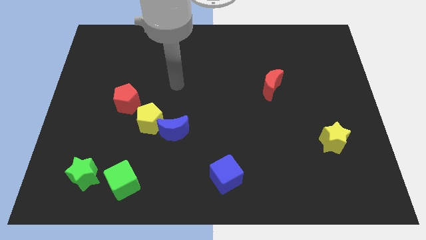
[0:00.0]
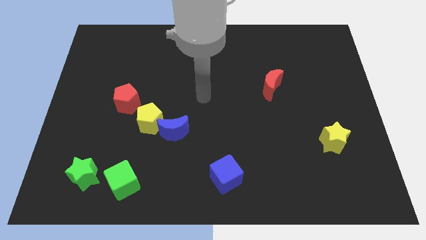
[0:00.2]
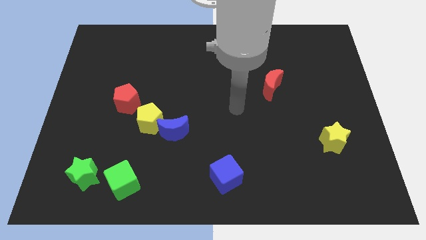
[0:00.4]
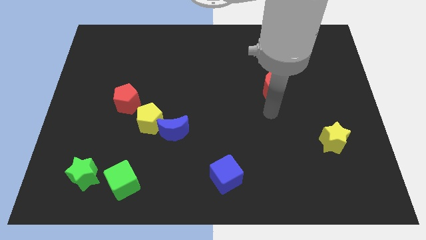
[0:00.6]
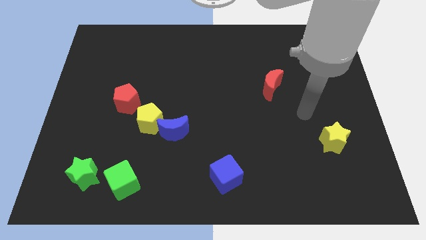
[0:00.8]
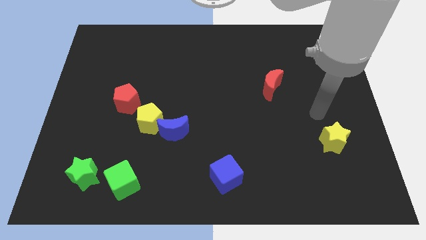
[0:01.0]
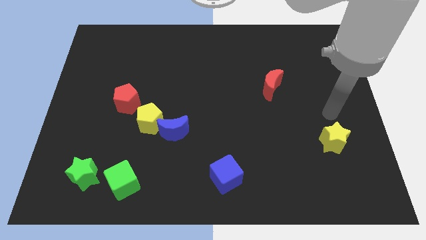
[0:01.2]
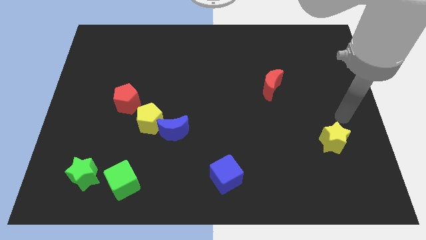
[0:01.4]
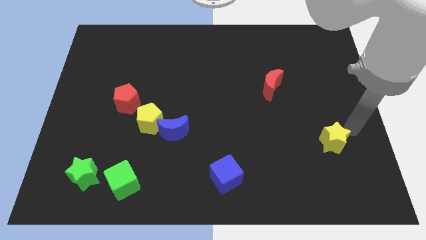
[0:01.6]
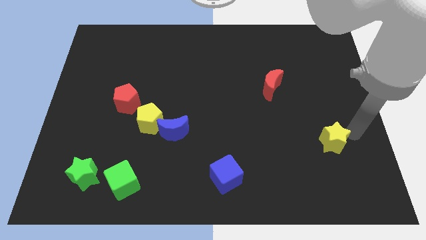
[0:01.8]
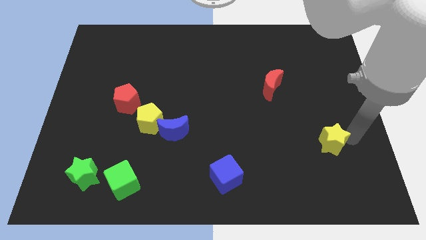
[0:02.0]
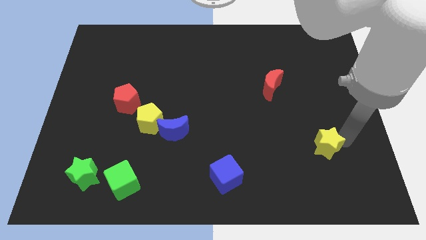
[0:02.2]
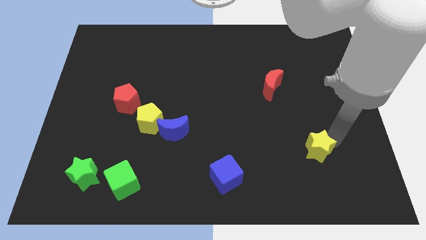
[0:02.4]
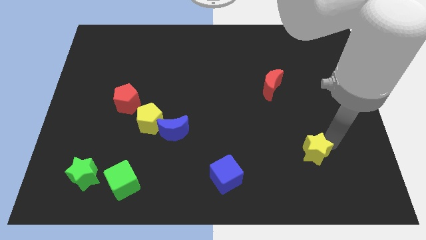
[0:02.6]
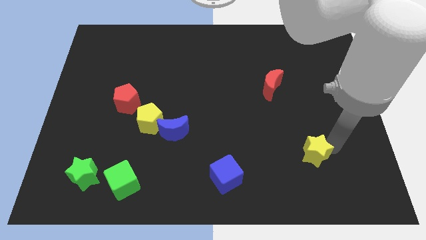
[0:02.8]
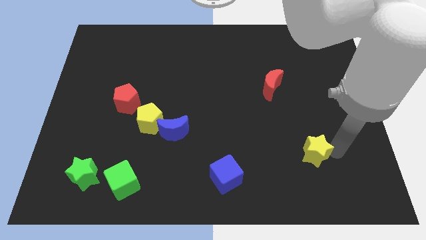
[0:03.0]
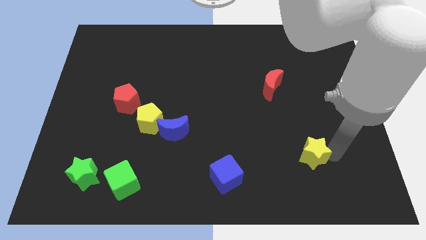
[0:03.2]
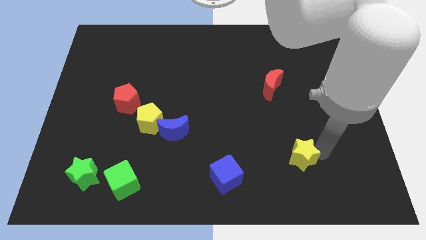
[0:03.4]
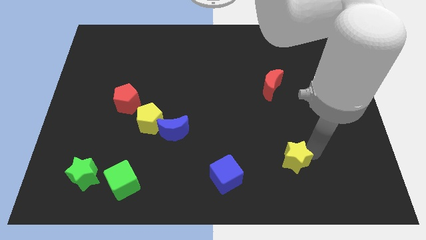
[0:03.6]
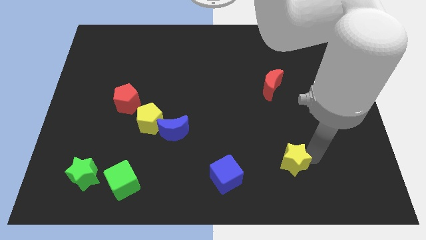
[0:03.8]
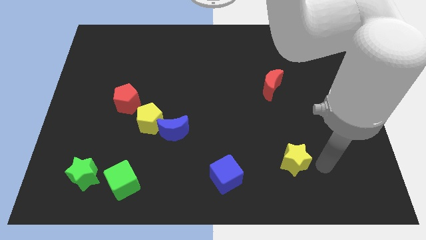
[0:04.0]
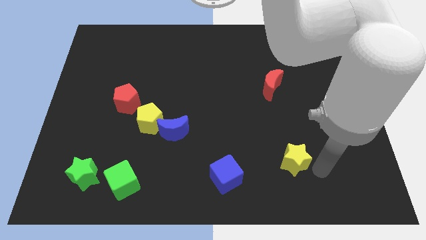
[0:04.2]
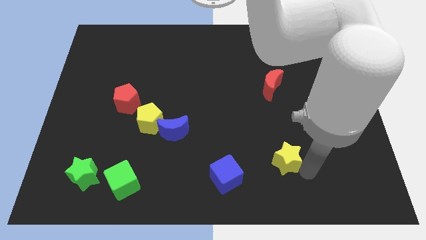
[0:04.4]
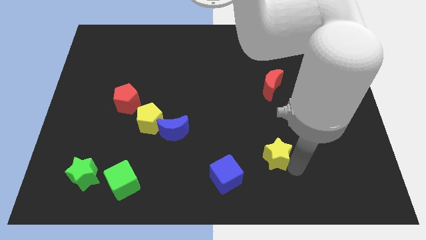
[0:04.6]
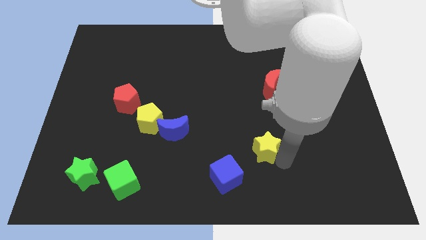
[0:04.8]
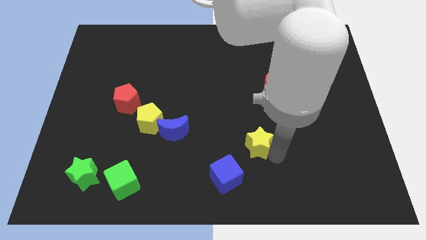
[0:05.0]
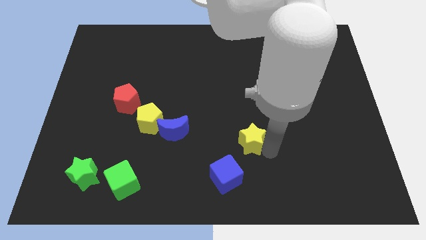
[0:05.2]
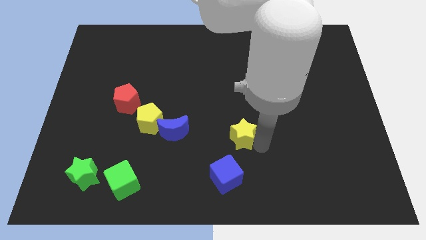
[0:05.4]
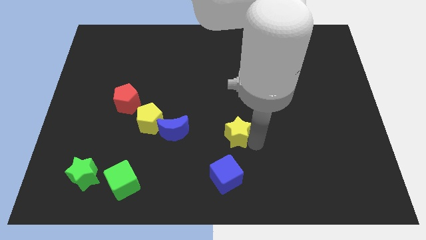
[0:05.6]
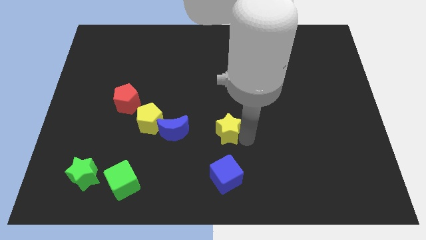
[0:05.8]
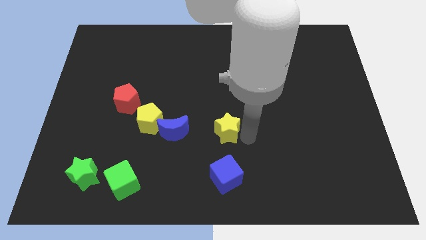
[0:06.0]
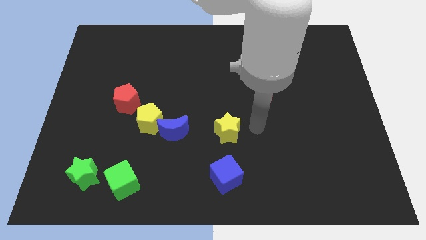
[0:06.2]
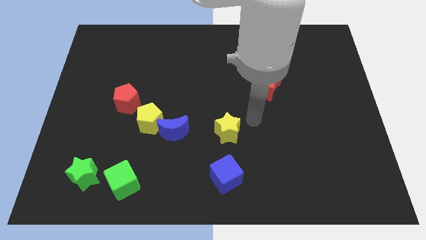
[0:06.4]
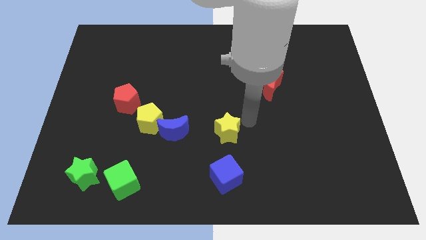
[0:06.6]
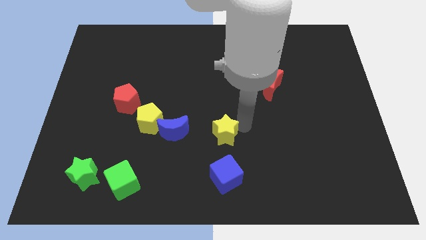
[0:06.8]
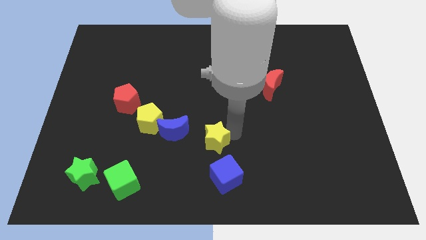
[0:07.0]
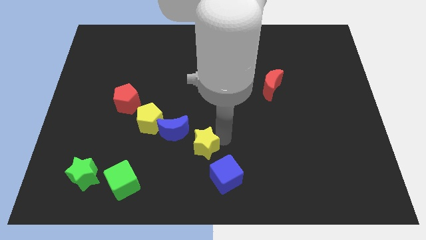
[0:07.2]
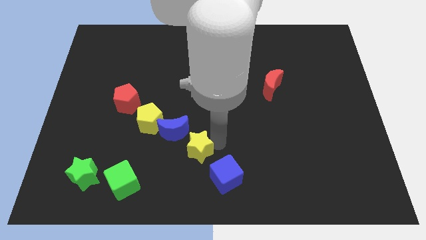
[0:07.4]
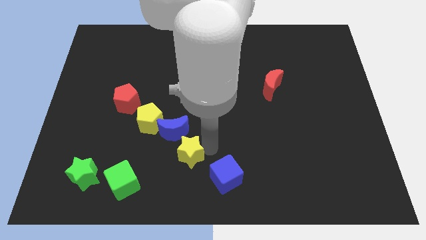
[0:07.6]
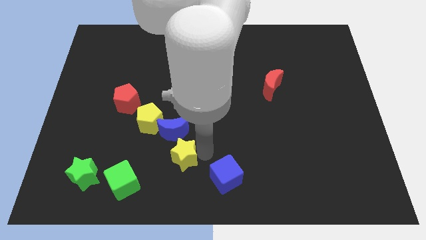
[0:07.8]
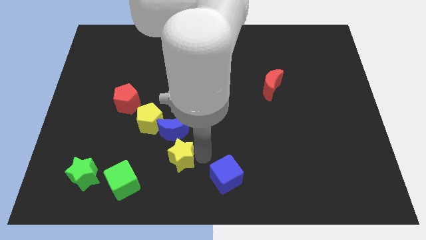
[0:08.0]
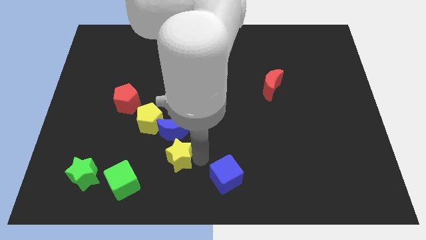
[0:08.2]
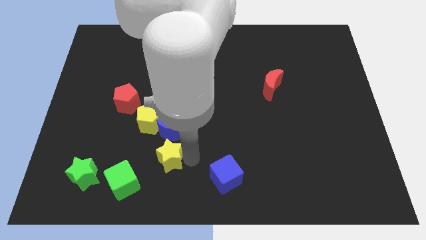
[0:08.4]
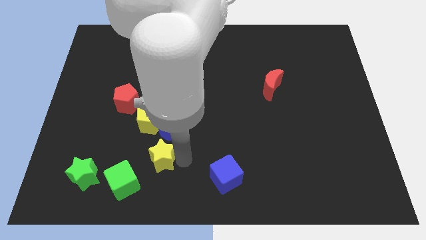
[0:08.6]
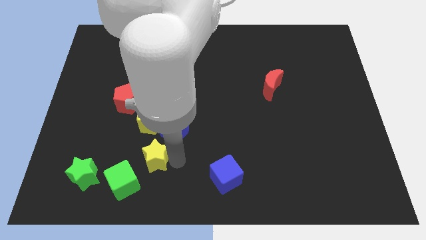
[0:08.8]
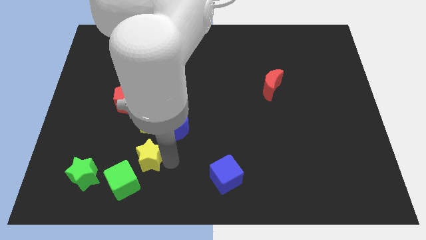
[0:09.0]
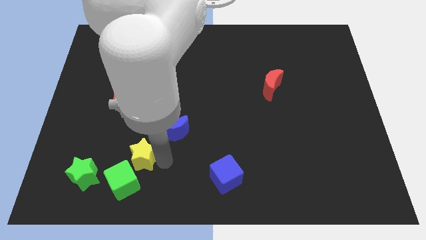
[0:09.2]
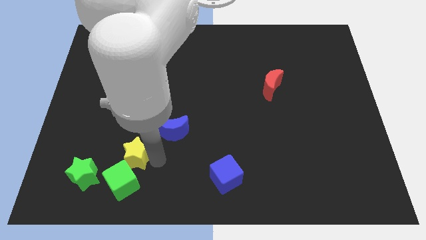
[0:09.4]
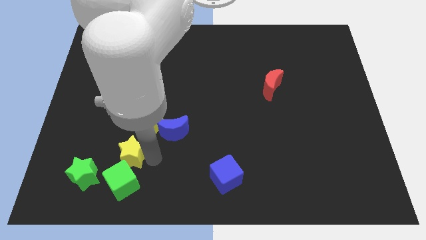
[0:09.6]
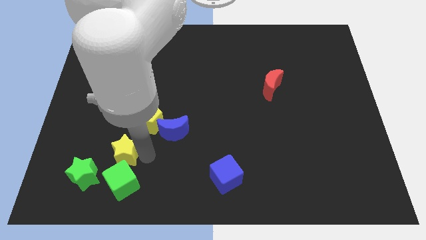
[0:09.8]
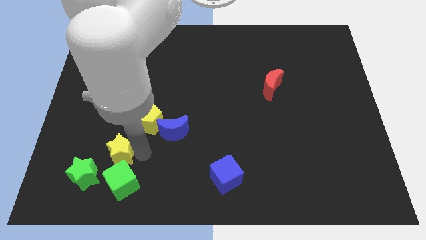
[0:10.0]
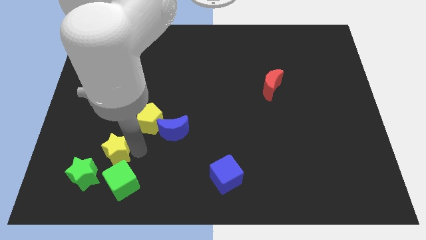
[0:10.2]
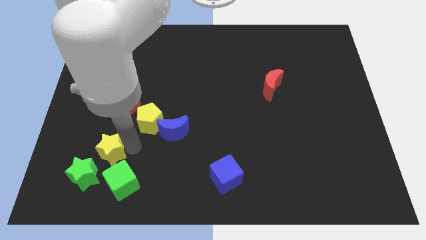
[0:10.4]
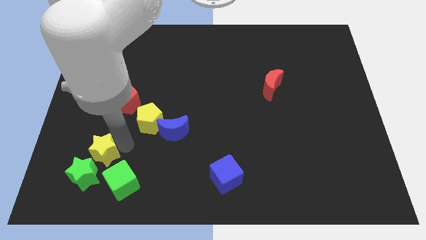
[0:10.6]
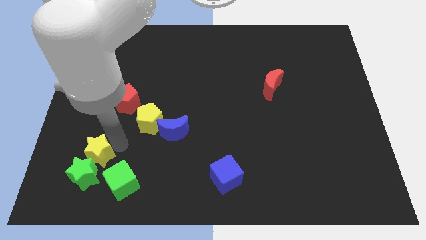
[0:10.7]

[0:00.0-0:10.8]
push the yellow star next to the green star

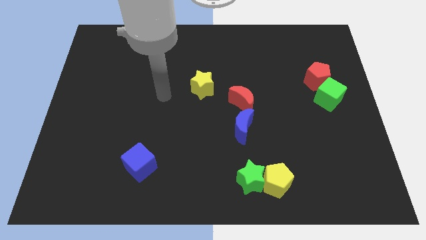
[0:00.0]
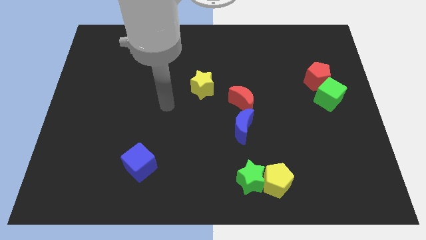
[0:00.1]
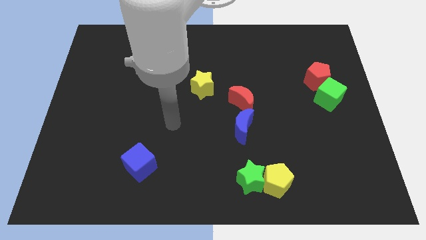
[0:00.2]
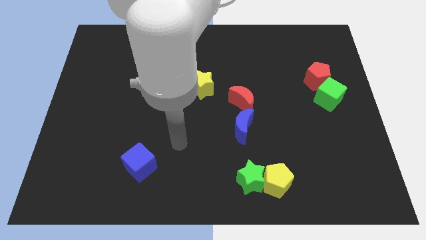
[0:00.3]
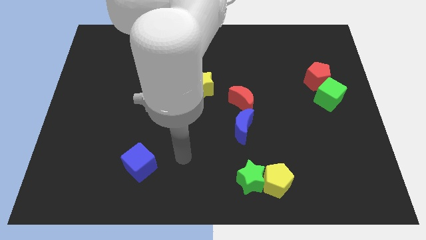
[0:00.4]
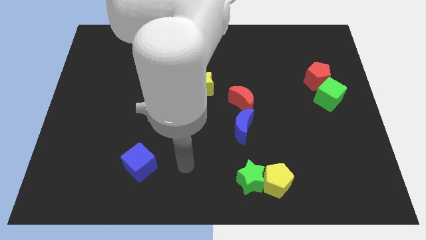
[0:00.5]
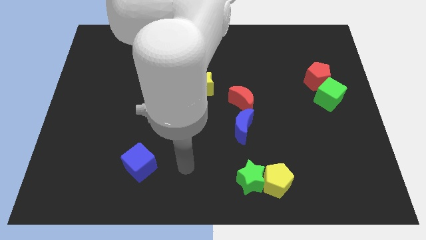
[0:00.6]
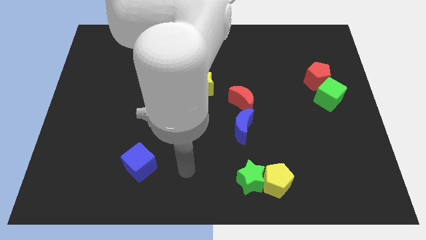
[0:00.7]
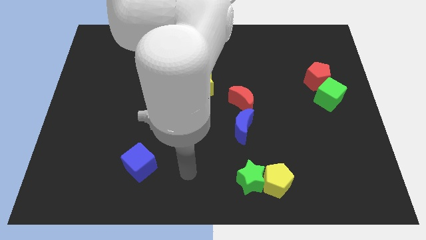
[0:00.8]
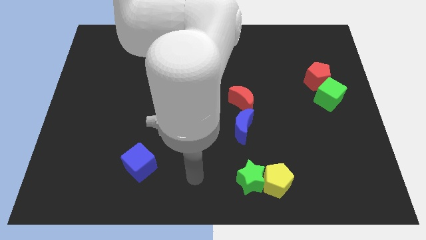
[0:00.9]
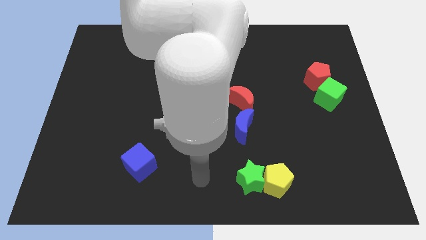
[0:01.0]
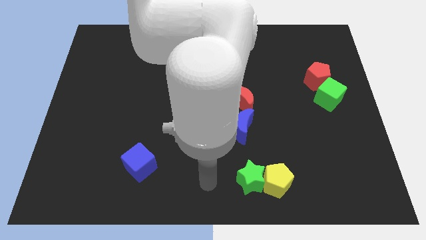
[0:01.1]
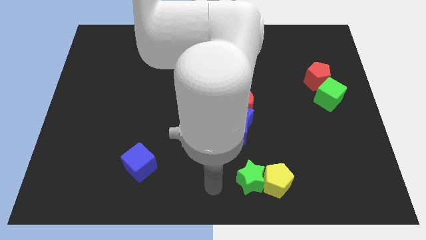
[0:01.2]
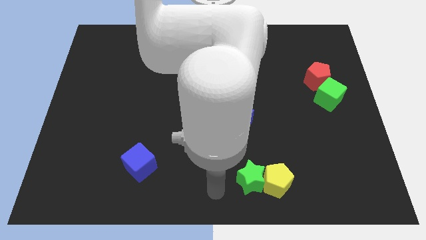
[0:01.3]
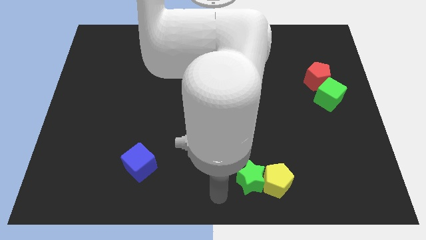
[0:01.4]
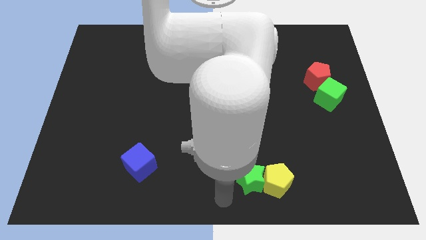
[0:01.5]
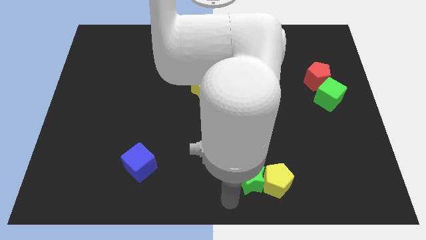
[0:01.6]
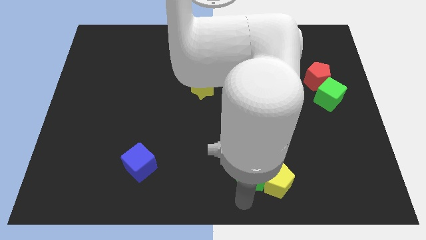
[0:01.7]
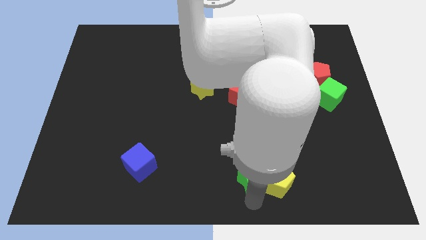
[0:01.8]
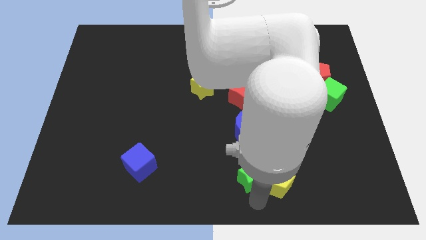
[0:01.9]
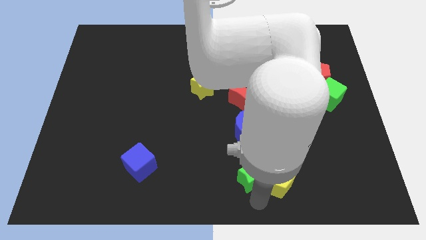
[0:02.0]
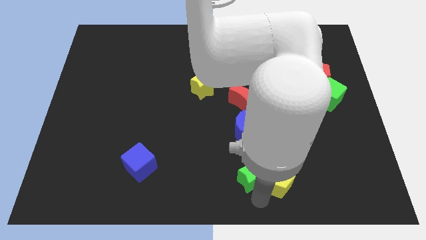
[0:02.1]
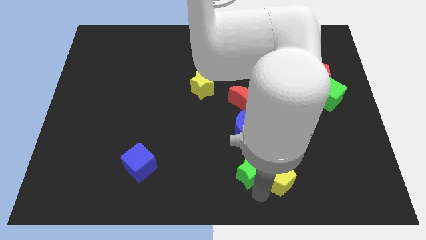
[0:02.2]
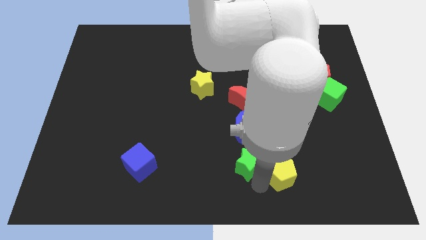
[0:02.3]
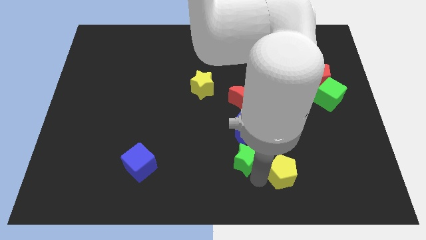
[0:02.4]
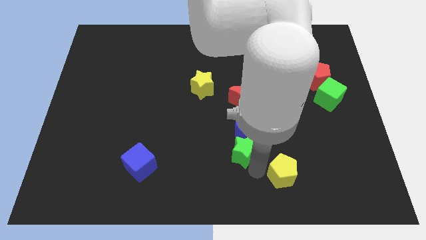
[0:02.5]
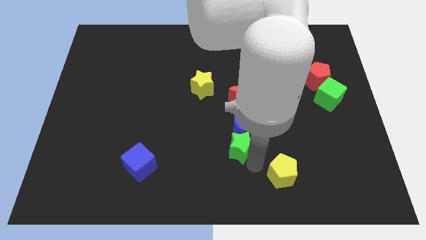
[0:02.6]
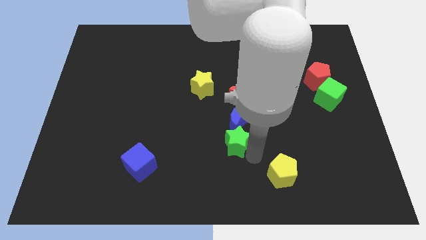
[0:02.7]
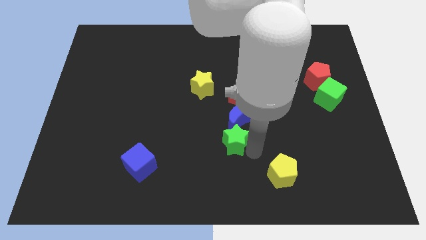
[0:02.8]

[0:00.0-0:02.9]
push the green star close to the blue moon

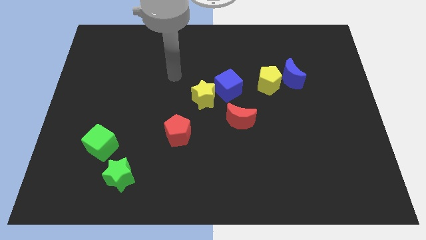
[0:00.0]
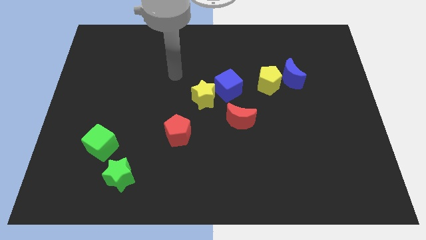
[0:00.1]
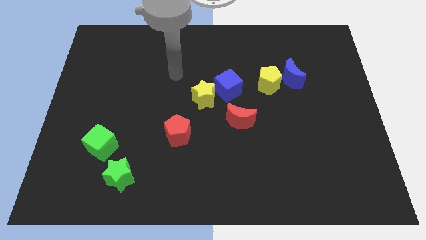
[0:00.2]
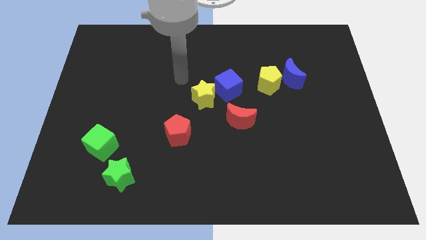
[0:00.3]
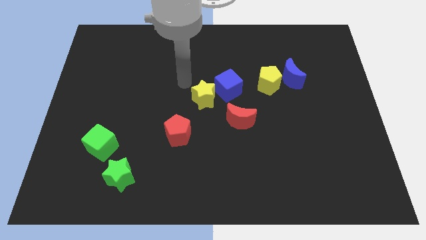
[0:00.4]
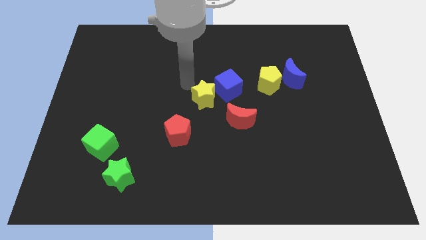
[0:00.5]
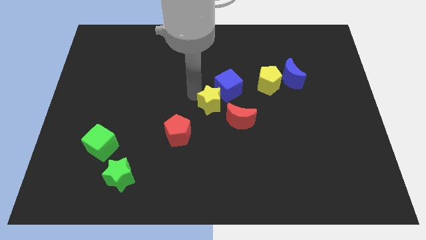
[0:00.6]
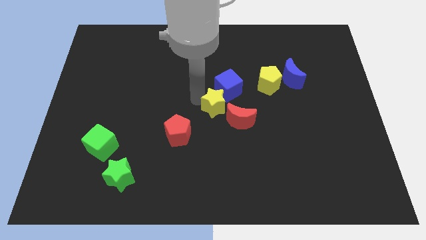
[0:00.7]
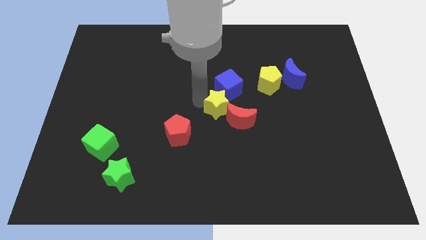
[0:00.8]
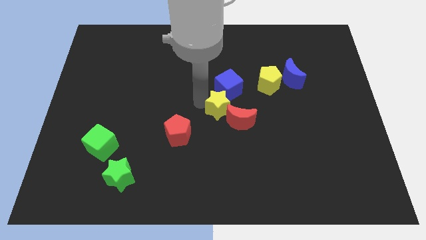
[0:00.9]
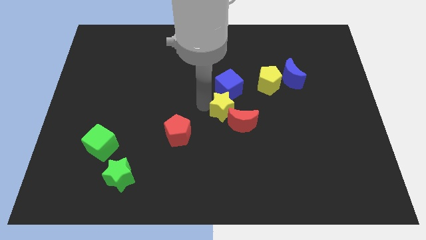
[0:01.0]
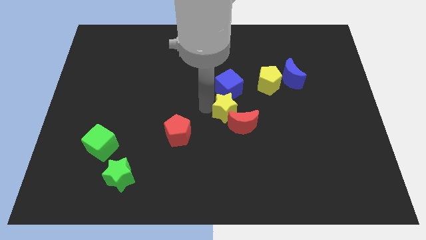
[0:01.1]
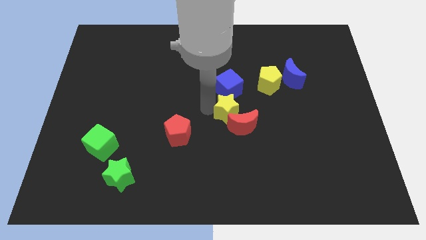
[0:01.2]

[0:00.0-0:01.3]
put the yellow star to the red moon
